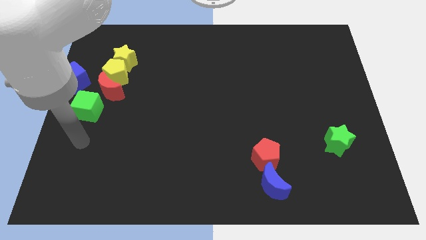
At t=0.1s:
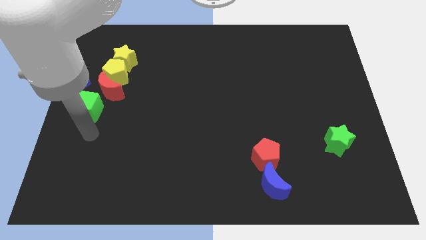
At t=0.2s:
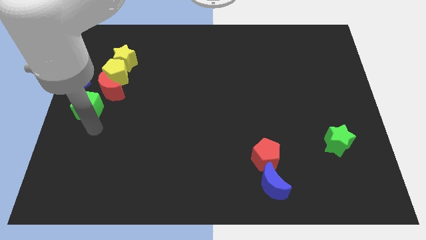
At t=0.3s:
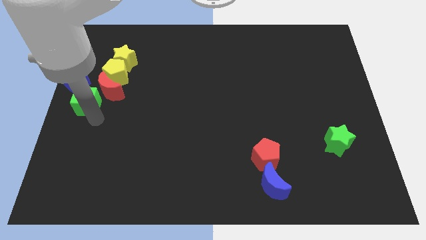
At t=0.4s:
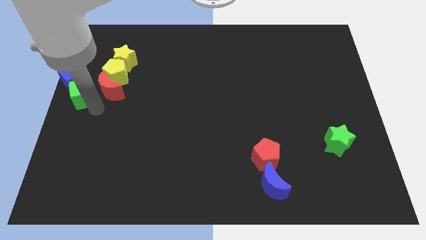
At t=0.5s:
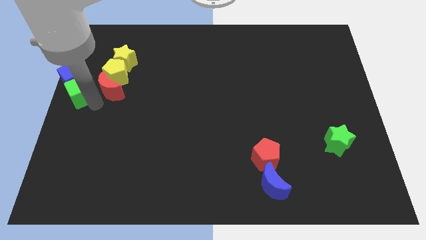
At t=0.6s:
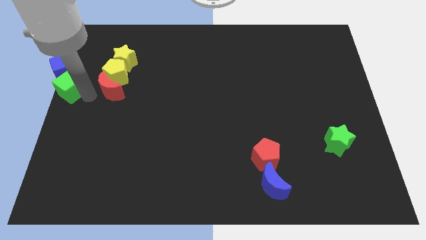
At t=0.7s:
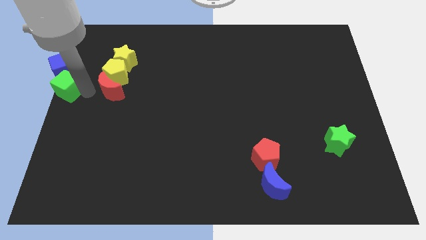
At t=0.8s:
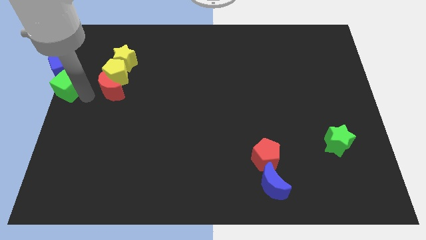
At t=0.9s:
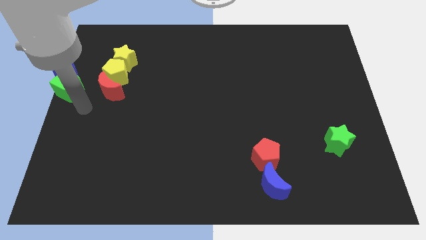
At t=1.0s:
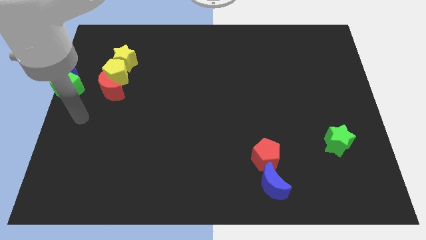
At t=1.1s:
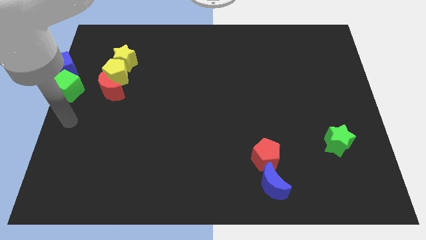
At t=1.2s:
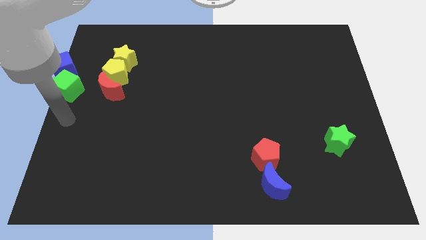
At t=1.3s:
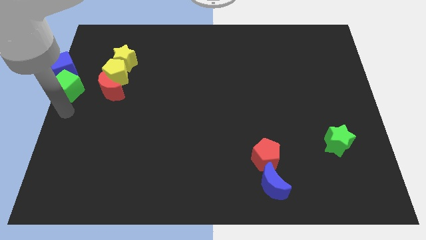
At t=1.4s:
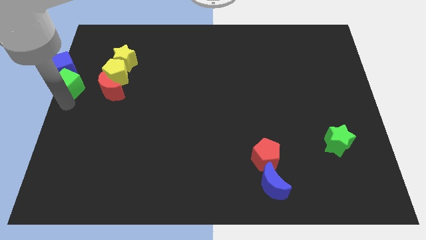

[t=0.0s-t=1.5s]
slide the green cube into the blue cube

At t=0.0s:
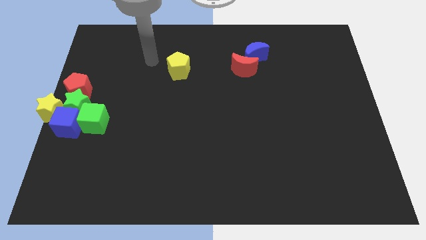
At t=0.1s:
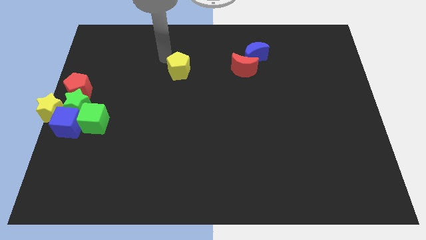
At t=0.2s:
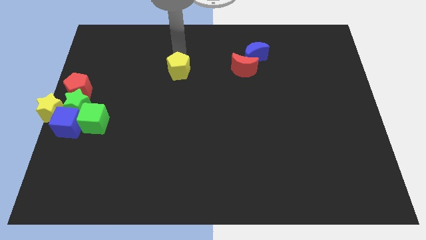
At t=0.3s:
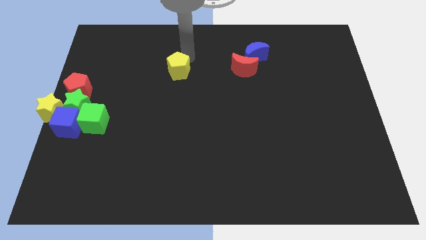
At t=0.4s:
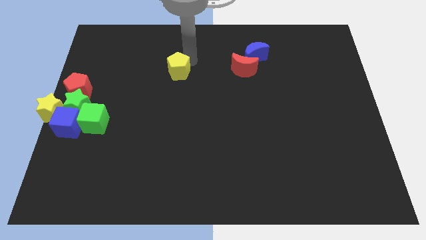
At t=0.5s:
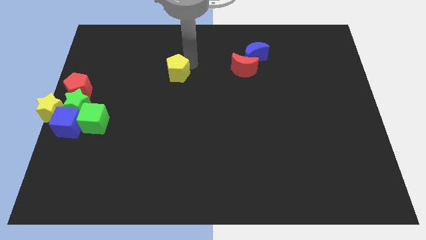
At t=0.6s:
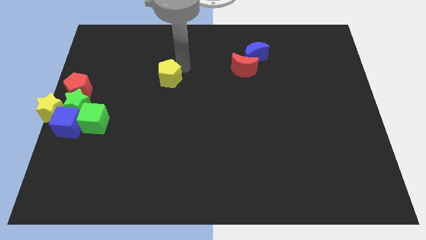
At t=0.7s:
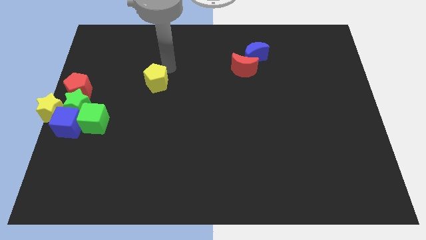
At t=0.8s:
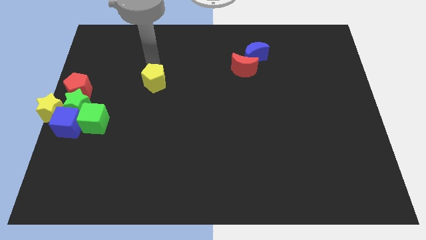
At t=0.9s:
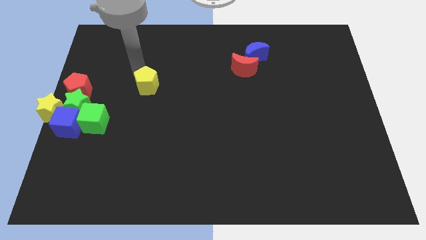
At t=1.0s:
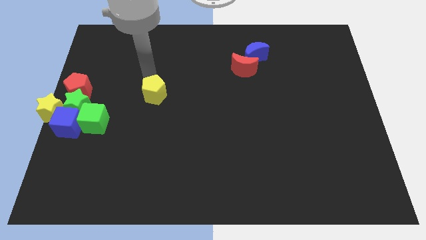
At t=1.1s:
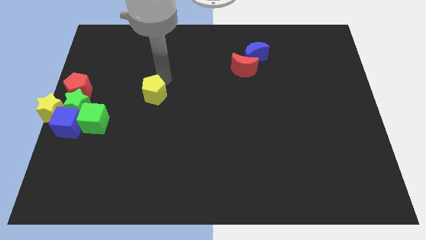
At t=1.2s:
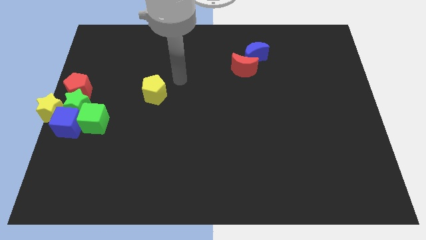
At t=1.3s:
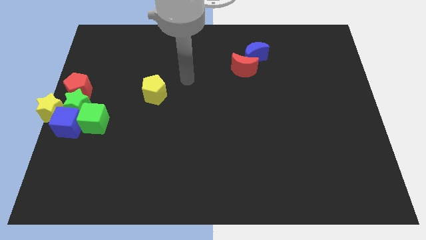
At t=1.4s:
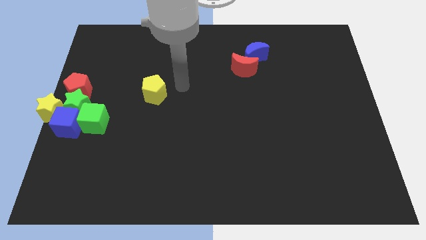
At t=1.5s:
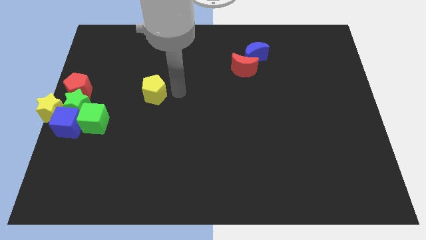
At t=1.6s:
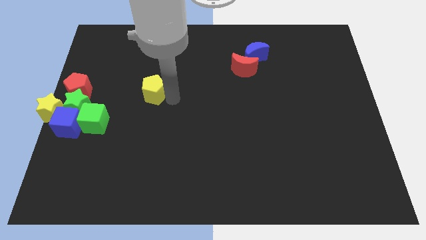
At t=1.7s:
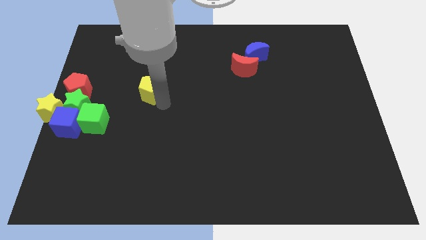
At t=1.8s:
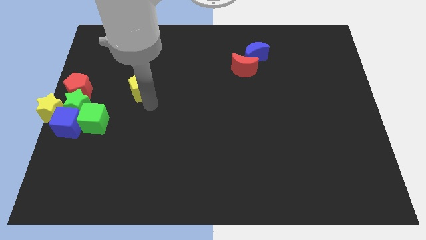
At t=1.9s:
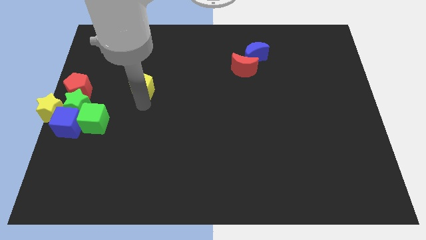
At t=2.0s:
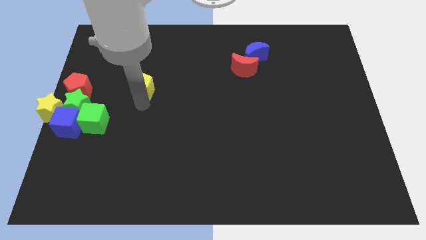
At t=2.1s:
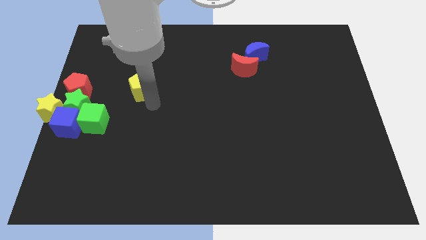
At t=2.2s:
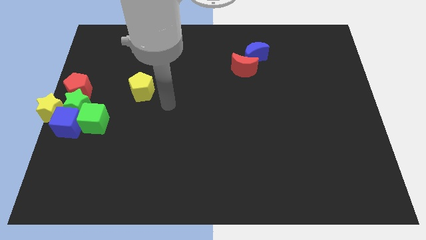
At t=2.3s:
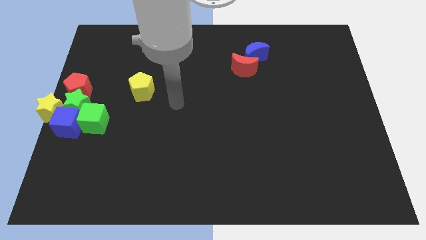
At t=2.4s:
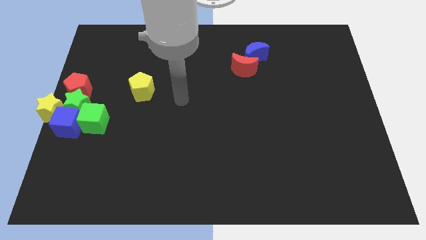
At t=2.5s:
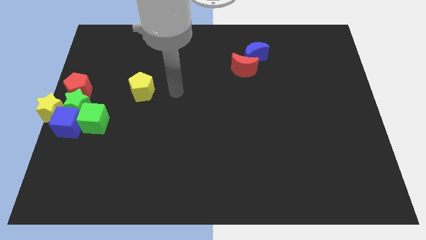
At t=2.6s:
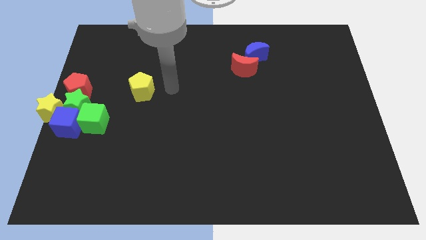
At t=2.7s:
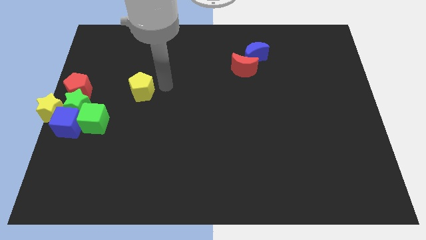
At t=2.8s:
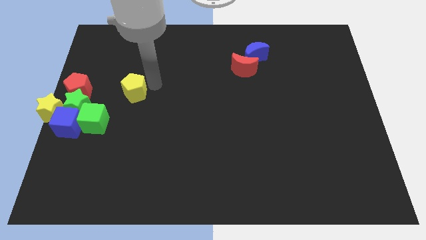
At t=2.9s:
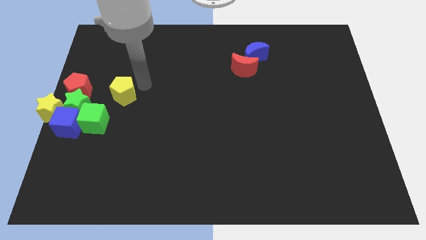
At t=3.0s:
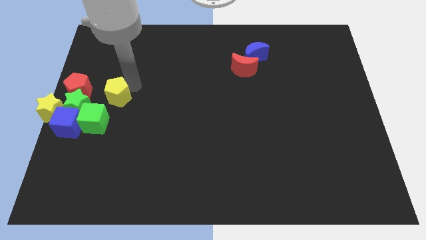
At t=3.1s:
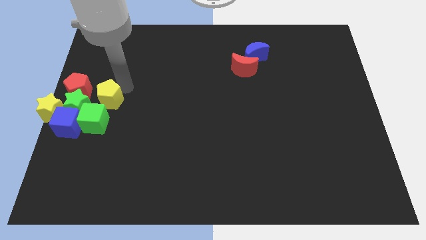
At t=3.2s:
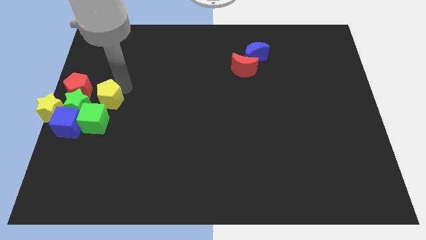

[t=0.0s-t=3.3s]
push the yellow pentagon towards the green star

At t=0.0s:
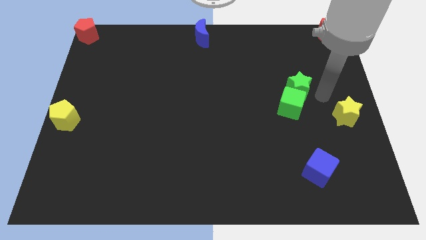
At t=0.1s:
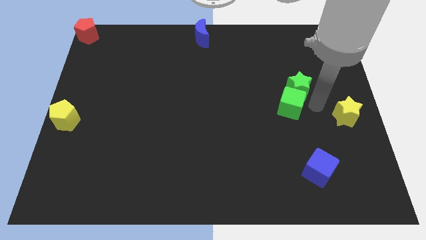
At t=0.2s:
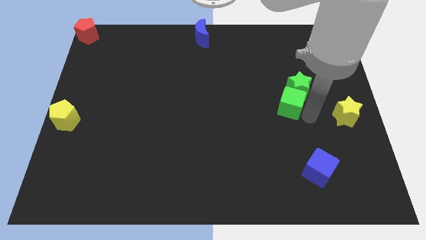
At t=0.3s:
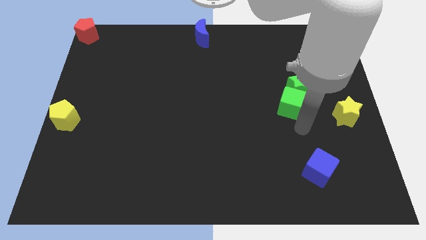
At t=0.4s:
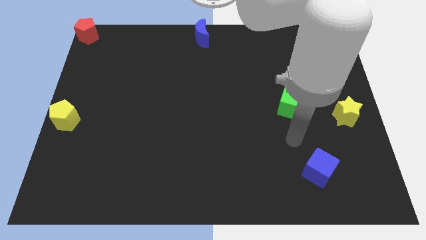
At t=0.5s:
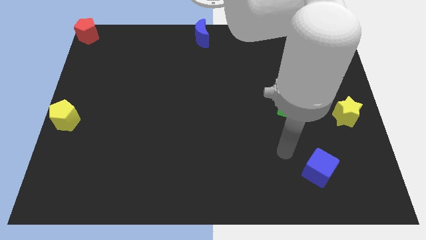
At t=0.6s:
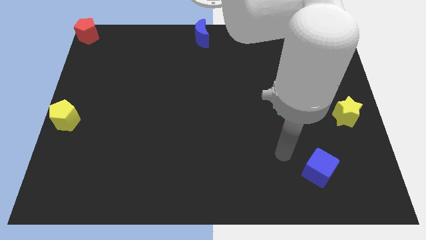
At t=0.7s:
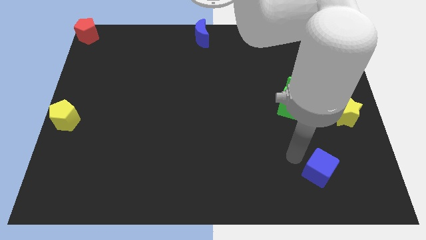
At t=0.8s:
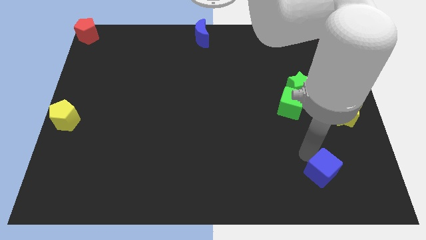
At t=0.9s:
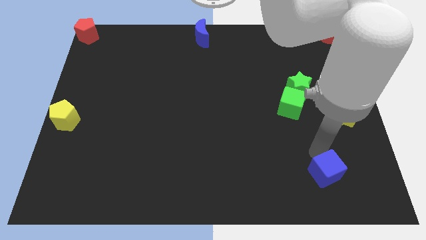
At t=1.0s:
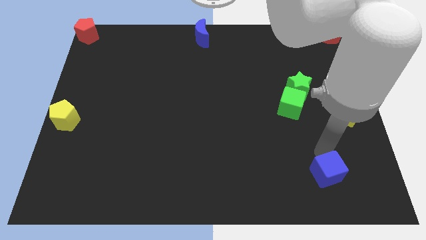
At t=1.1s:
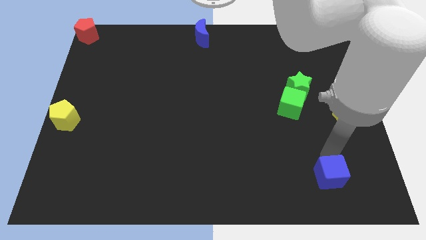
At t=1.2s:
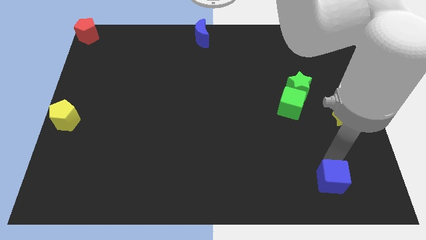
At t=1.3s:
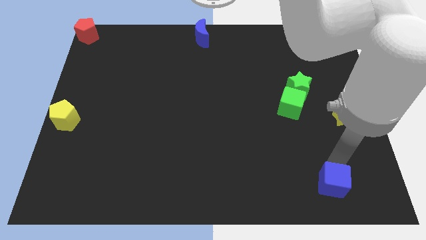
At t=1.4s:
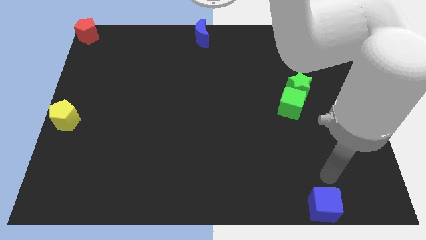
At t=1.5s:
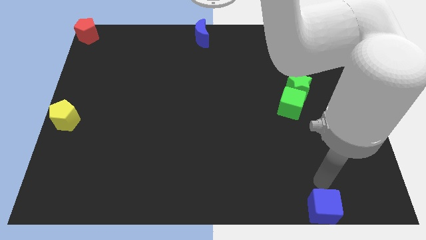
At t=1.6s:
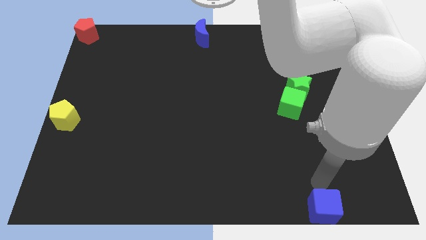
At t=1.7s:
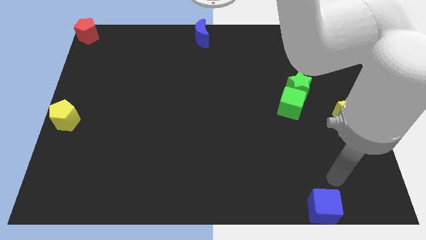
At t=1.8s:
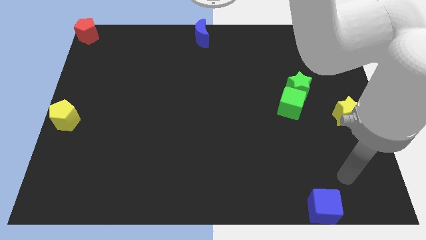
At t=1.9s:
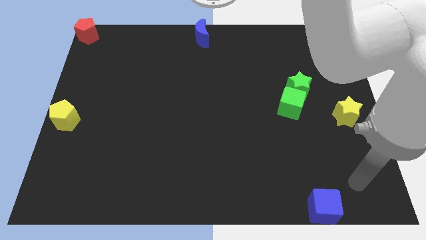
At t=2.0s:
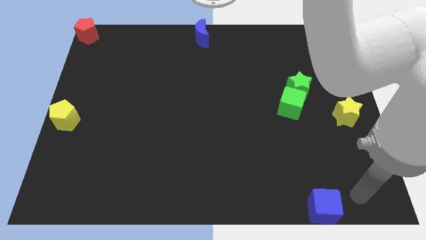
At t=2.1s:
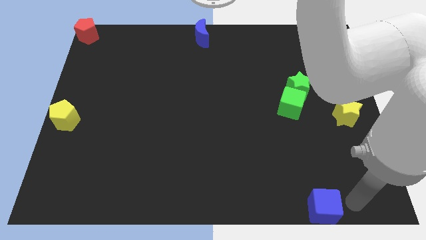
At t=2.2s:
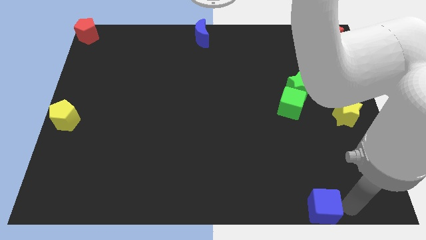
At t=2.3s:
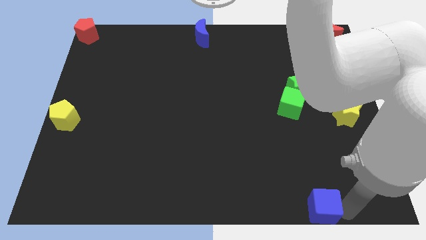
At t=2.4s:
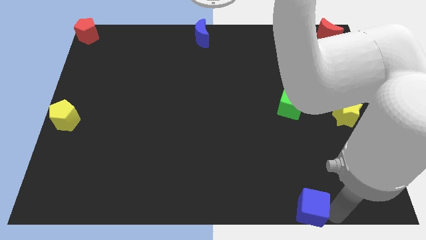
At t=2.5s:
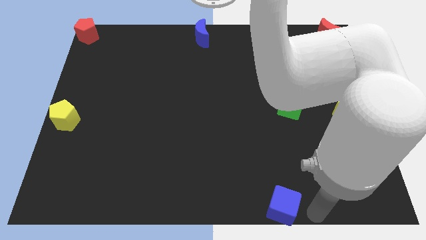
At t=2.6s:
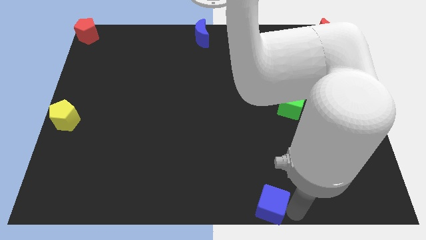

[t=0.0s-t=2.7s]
place the blue cube at the bottom of the board

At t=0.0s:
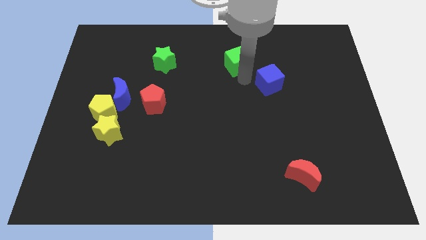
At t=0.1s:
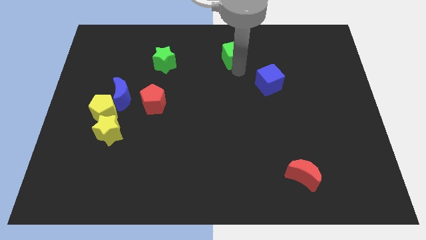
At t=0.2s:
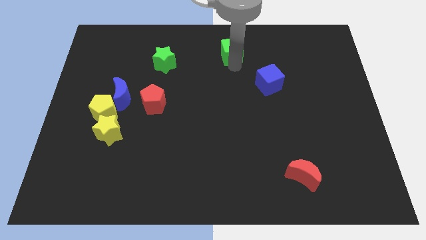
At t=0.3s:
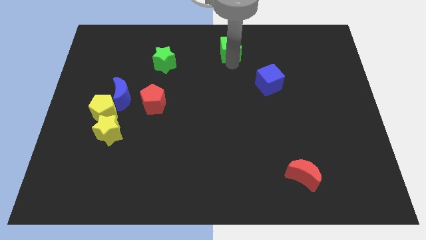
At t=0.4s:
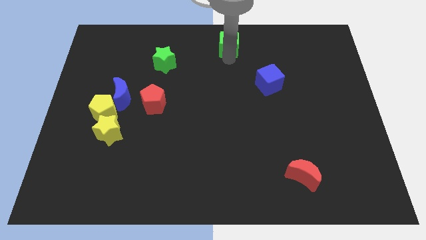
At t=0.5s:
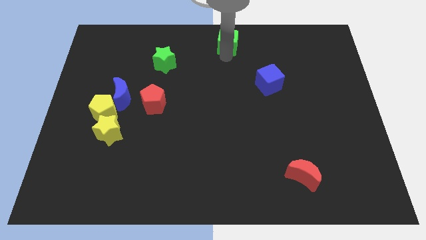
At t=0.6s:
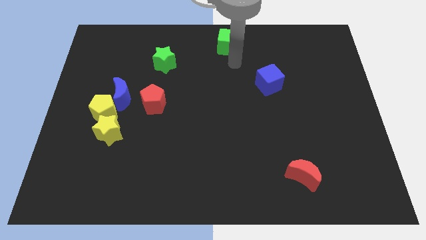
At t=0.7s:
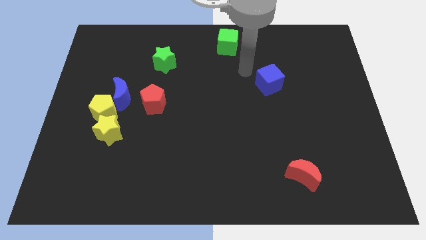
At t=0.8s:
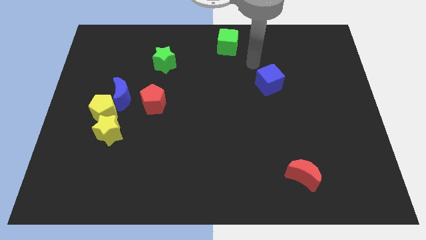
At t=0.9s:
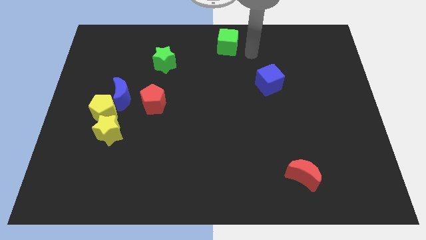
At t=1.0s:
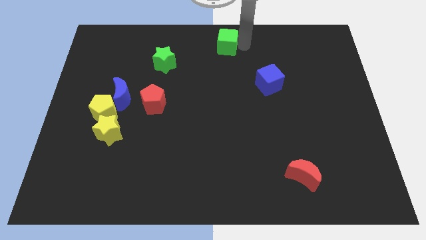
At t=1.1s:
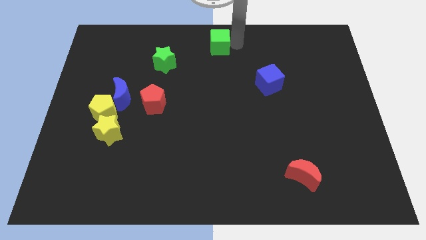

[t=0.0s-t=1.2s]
put the green cube at the top center of the board
